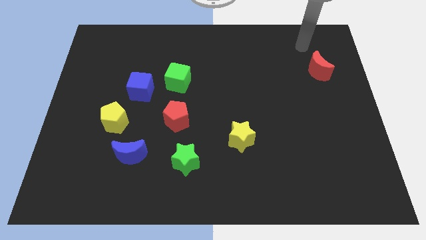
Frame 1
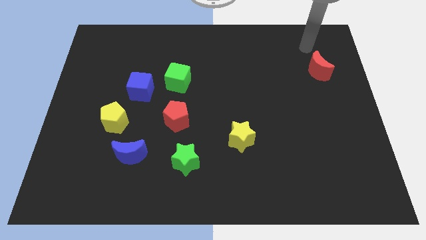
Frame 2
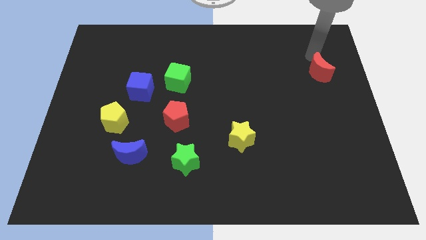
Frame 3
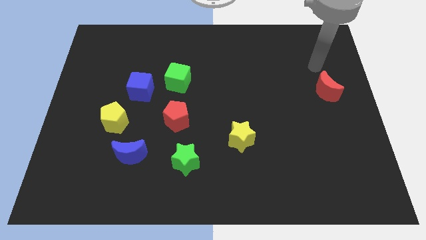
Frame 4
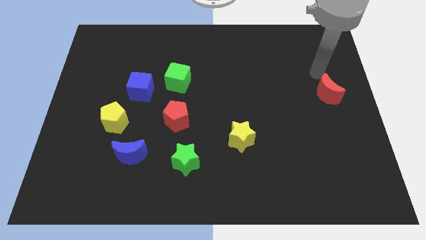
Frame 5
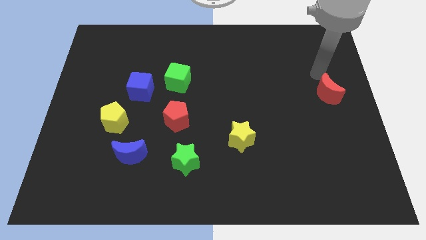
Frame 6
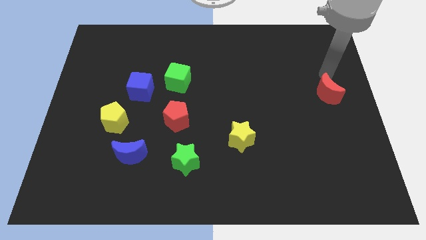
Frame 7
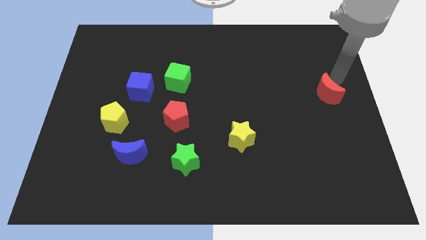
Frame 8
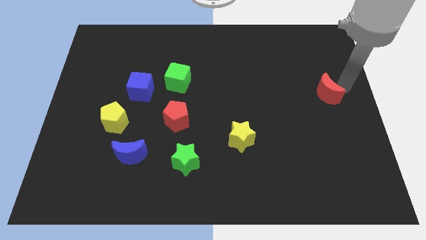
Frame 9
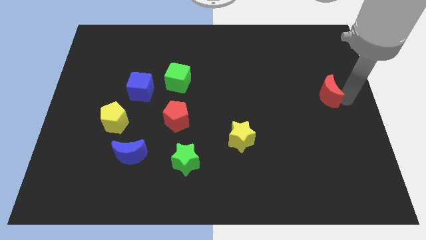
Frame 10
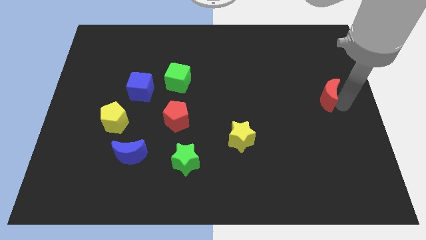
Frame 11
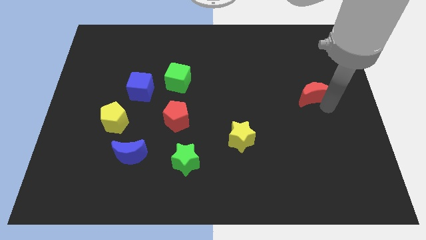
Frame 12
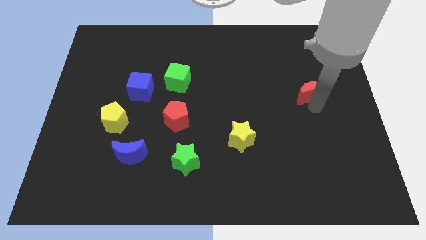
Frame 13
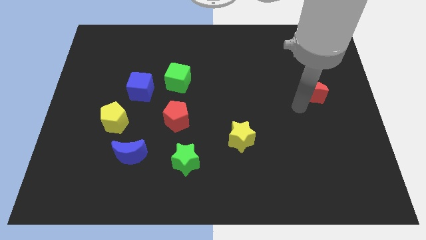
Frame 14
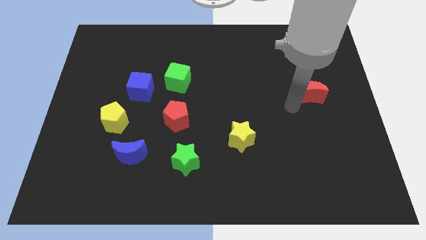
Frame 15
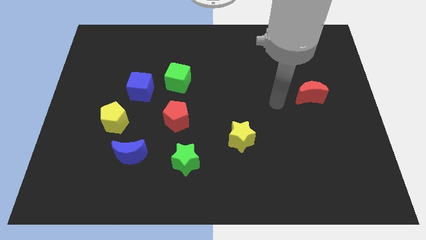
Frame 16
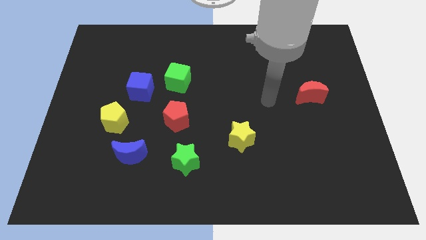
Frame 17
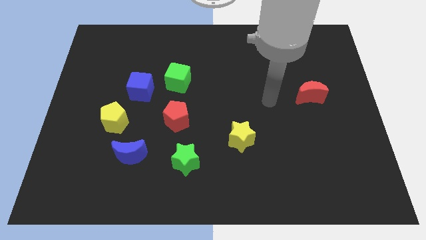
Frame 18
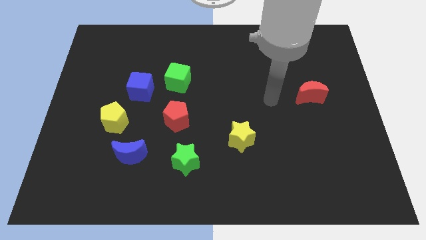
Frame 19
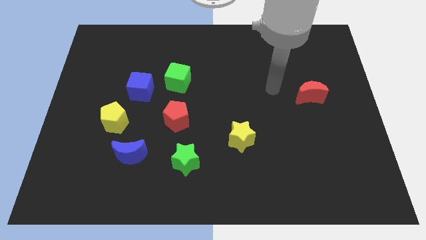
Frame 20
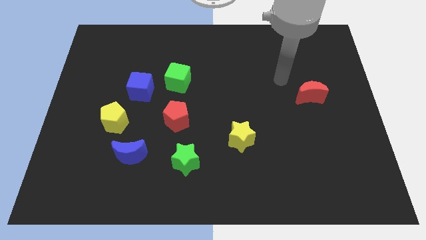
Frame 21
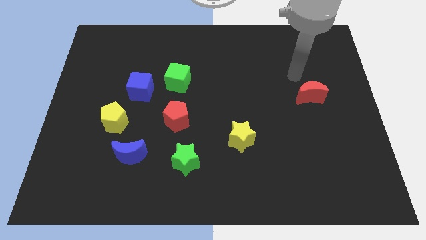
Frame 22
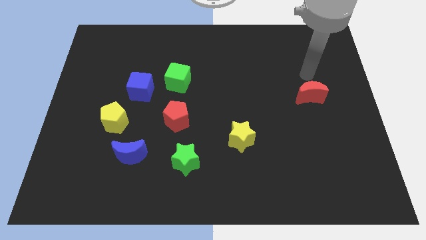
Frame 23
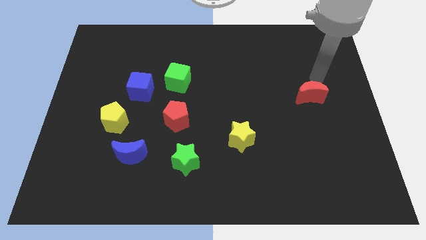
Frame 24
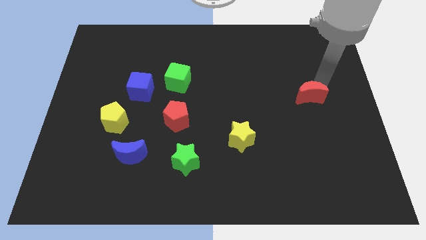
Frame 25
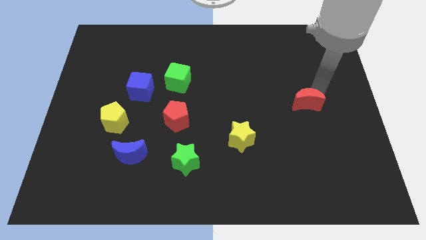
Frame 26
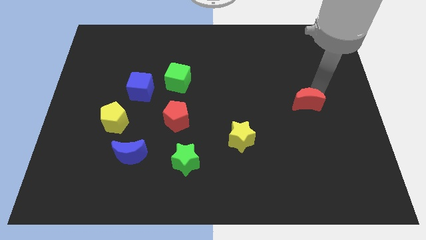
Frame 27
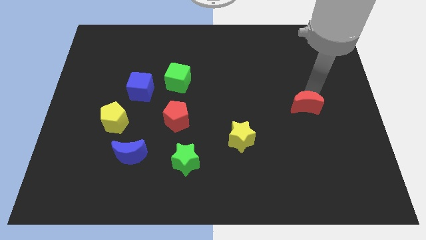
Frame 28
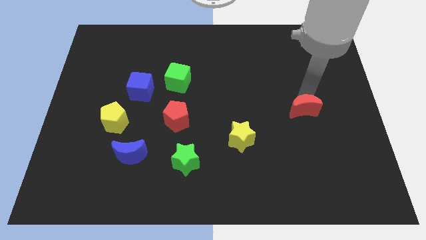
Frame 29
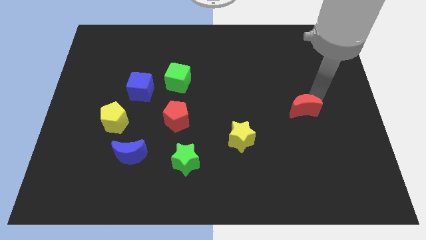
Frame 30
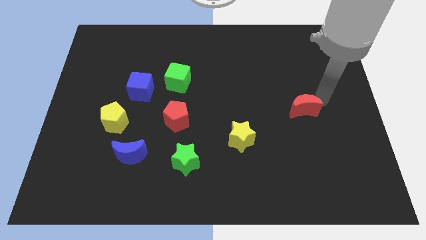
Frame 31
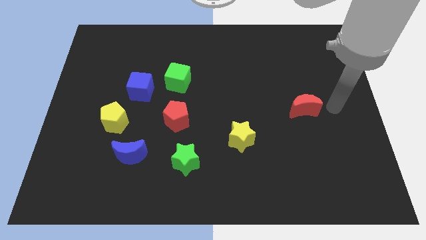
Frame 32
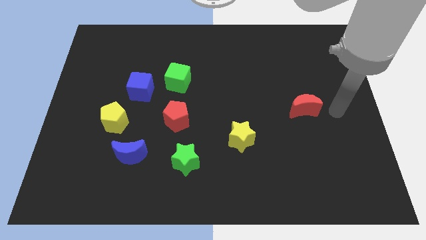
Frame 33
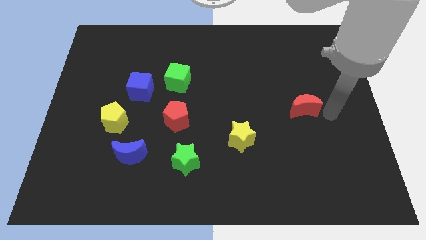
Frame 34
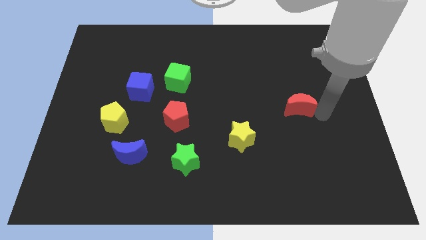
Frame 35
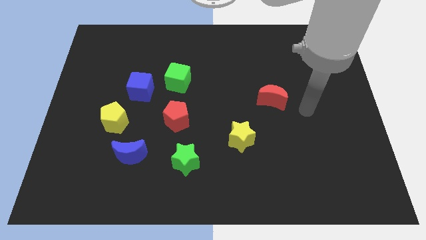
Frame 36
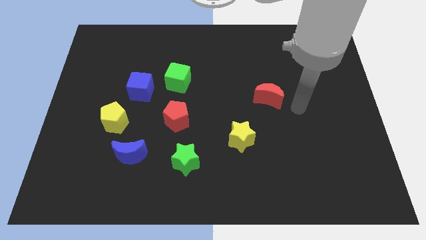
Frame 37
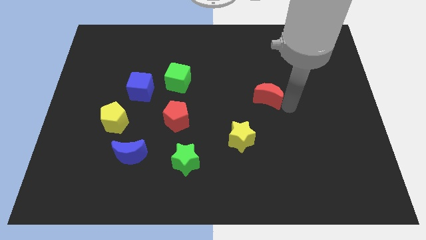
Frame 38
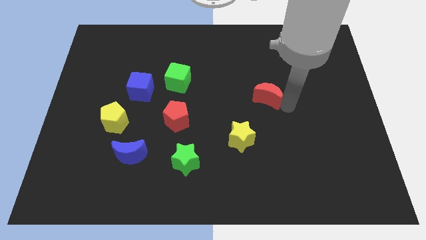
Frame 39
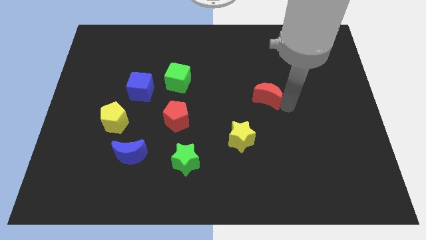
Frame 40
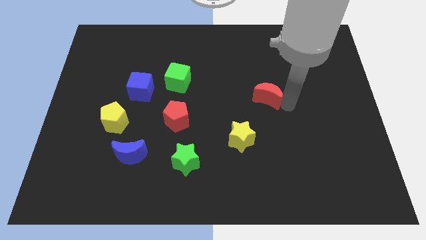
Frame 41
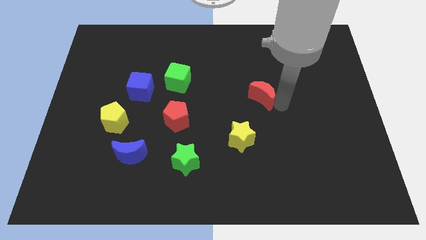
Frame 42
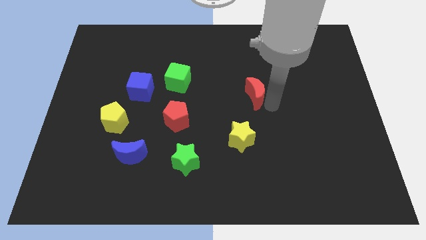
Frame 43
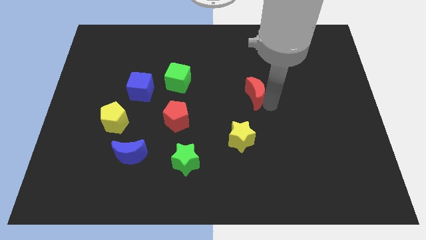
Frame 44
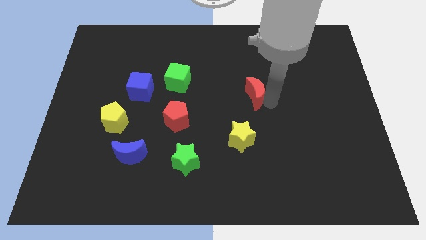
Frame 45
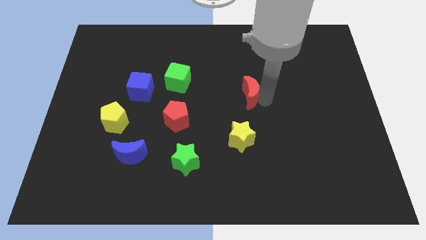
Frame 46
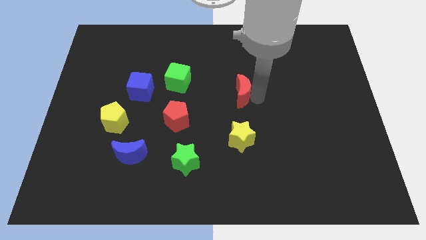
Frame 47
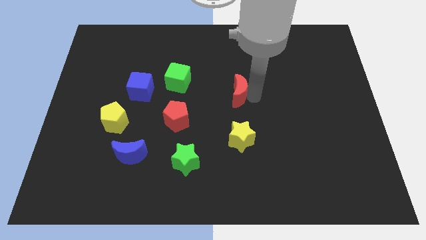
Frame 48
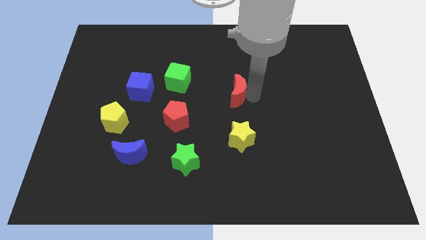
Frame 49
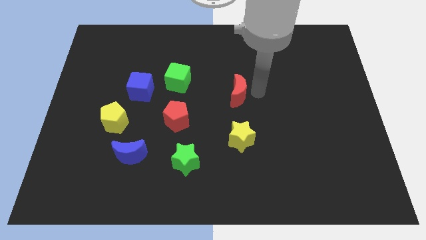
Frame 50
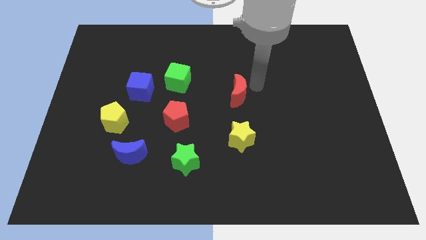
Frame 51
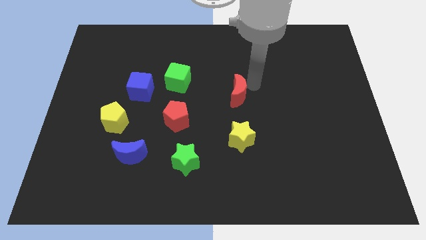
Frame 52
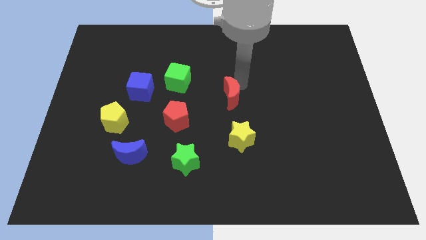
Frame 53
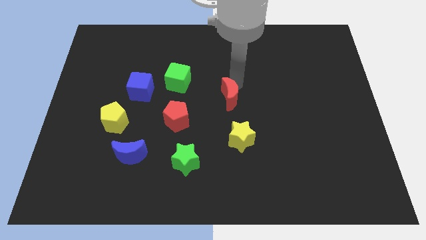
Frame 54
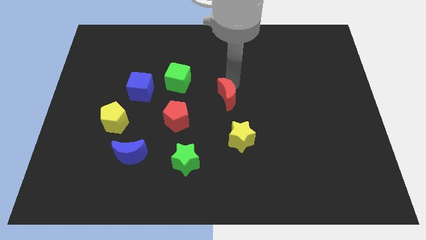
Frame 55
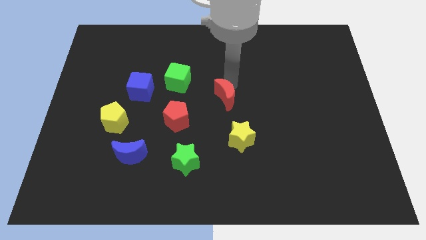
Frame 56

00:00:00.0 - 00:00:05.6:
place the red crescent at the top of the yellow star

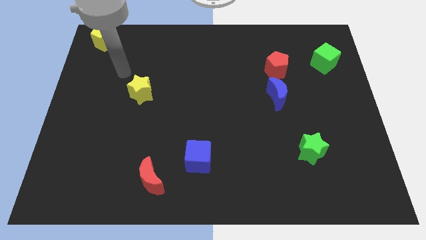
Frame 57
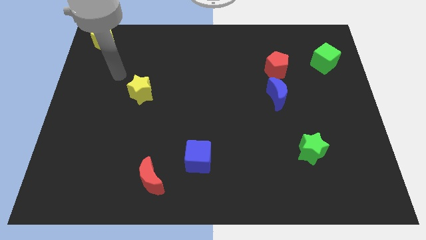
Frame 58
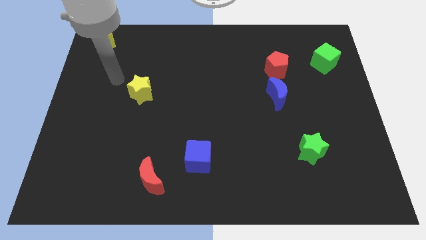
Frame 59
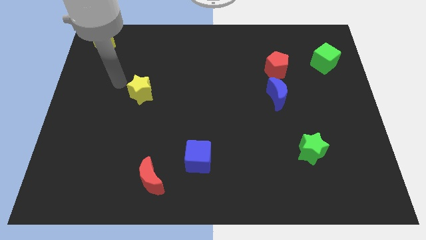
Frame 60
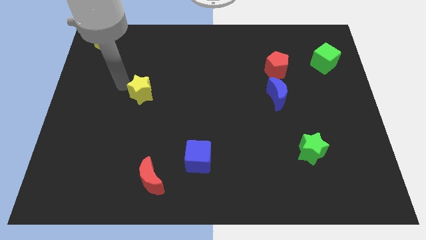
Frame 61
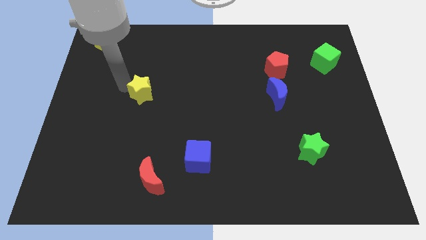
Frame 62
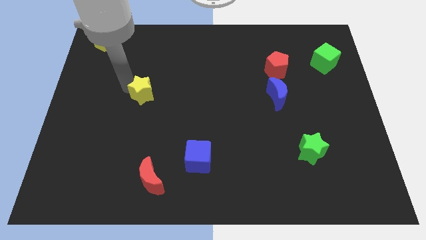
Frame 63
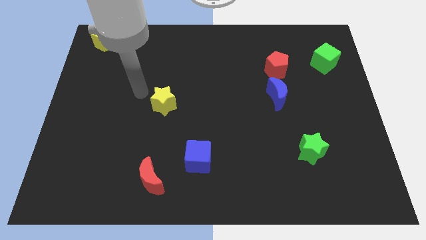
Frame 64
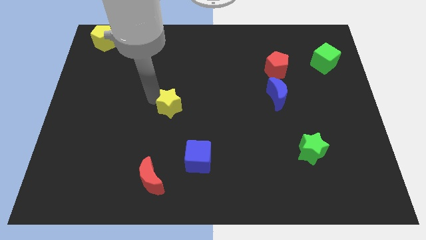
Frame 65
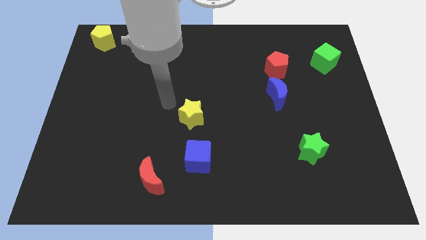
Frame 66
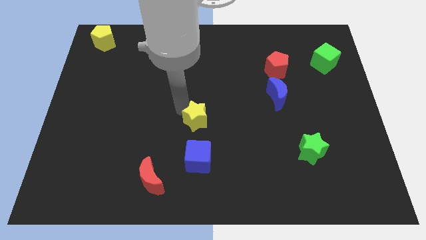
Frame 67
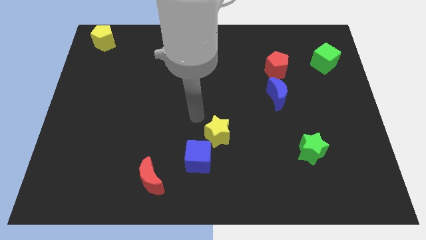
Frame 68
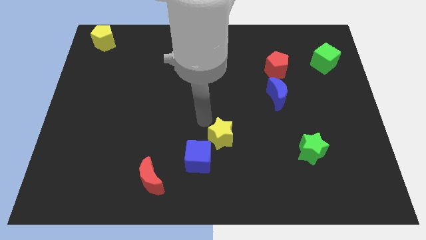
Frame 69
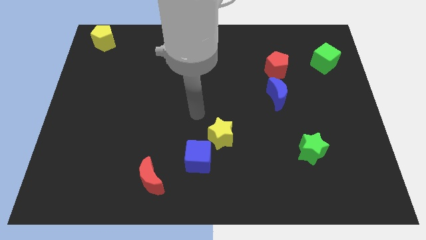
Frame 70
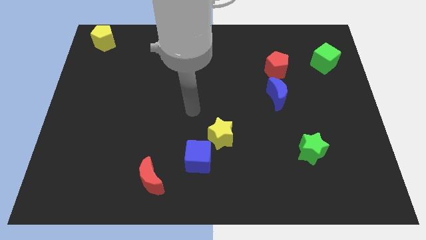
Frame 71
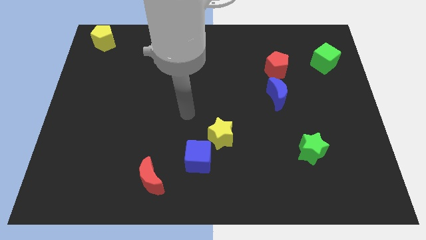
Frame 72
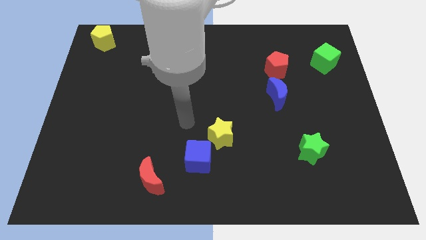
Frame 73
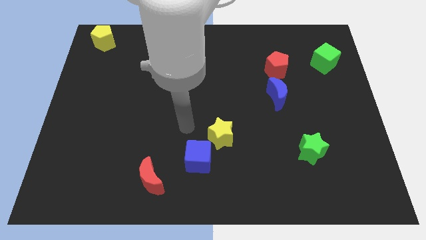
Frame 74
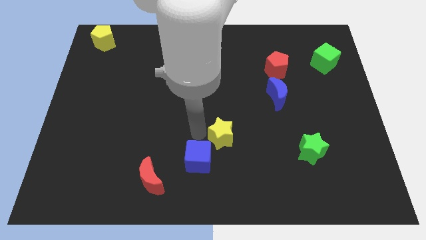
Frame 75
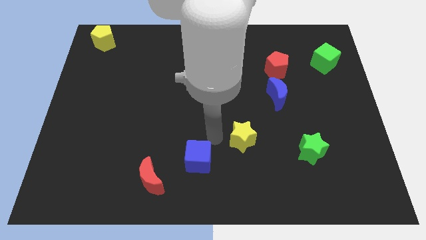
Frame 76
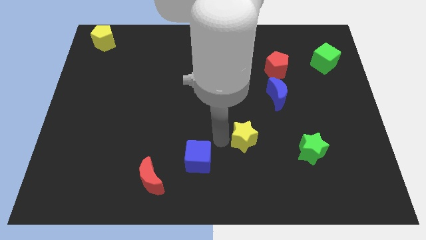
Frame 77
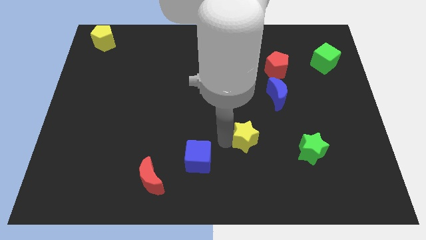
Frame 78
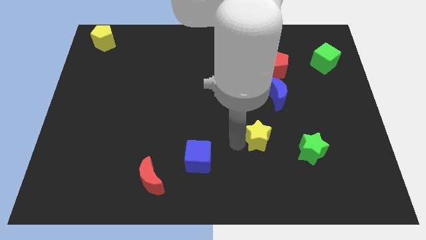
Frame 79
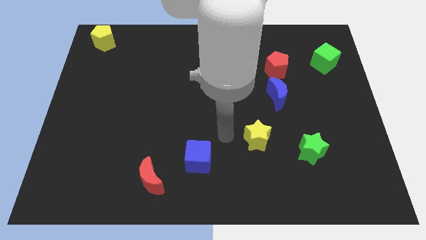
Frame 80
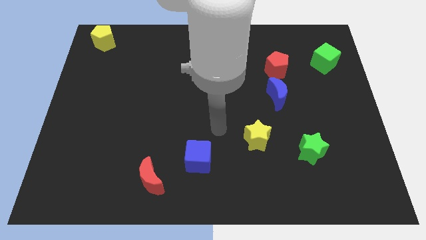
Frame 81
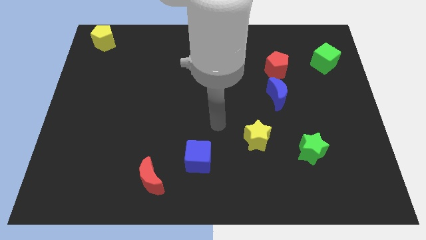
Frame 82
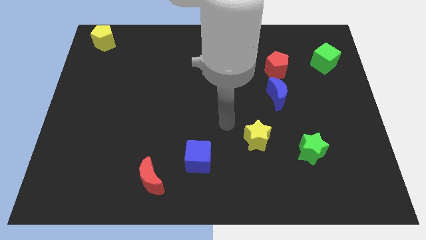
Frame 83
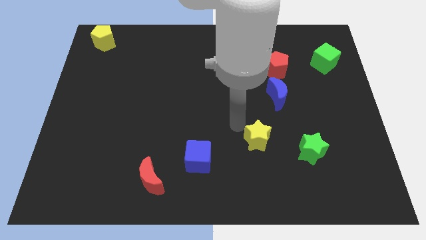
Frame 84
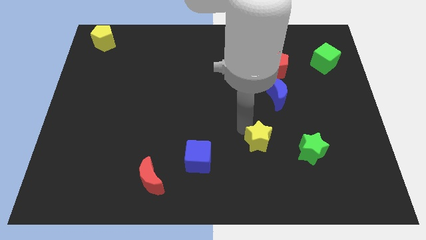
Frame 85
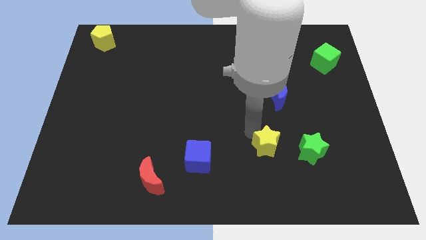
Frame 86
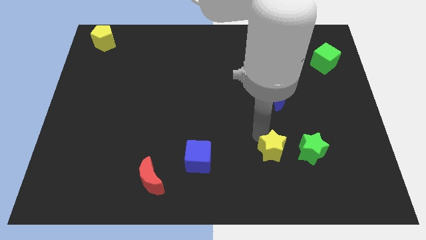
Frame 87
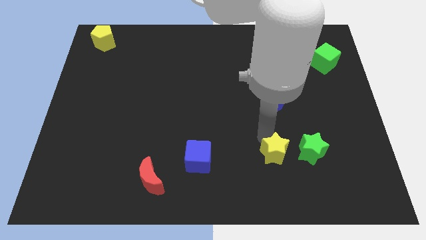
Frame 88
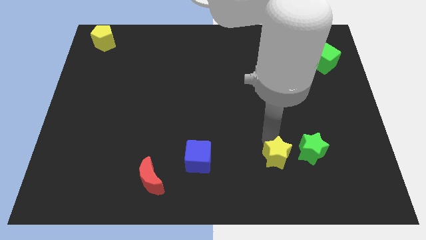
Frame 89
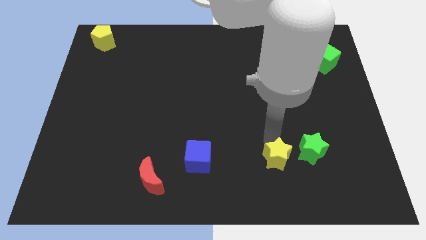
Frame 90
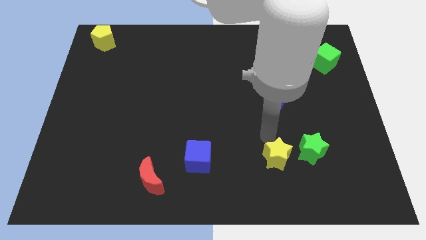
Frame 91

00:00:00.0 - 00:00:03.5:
move the yellow star to the right side of the green star
